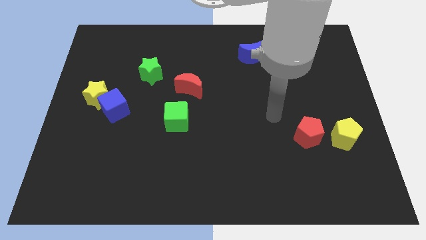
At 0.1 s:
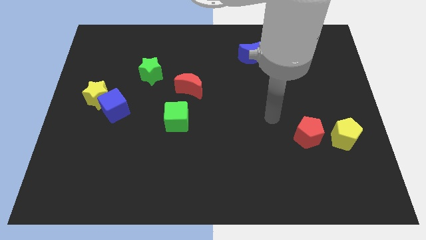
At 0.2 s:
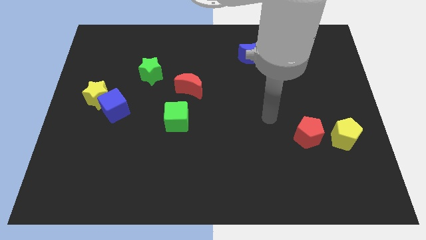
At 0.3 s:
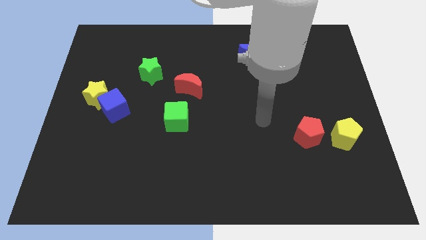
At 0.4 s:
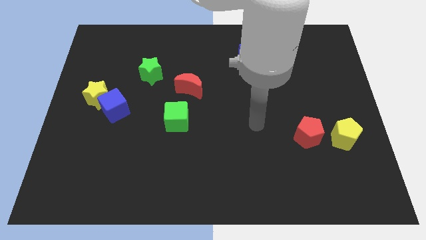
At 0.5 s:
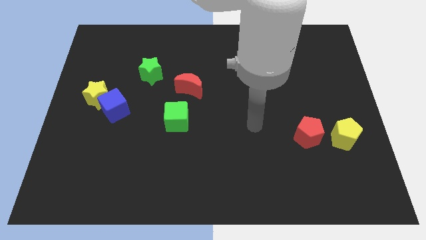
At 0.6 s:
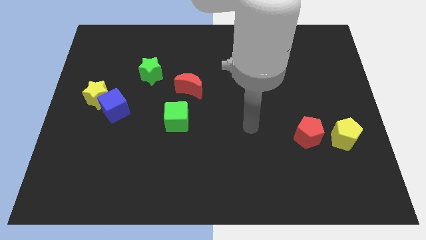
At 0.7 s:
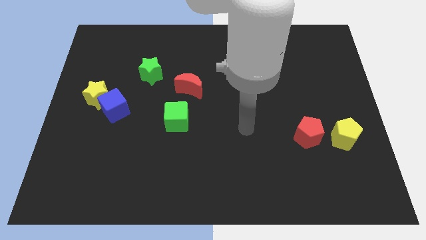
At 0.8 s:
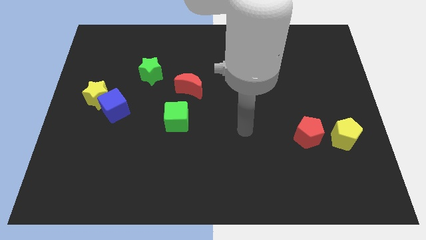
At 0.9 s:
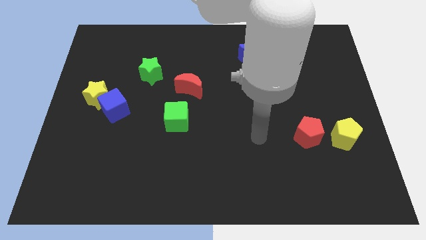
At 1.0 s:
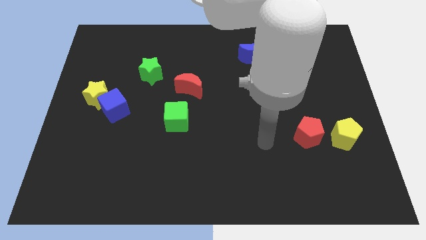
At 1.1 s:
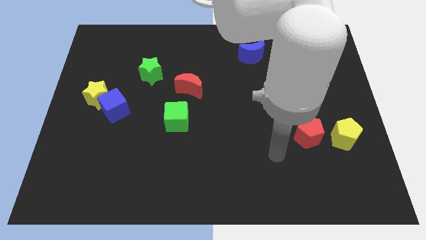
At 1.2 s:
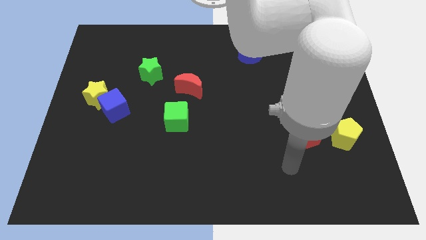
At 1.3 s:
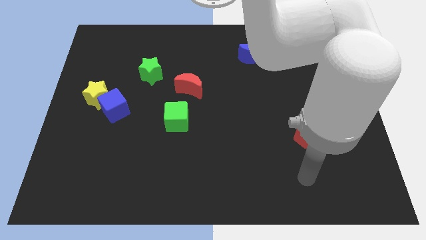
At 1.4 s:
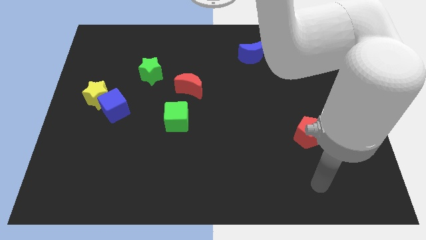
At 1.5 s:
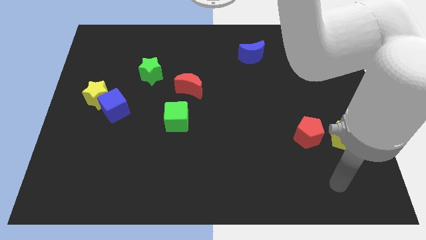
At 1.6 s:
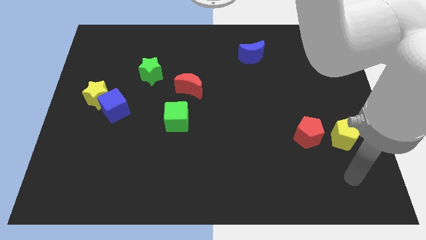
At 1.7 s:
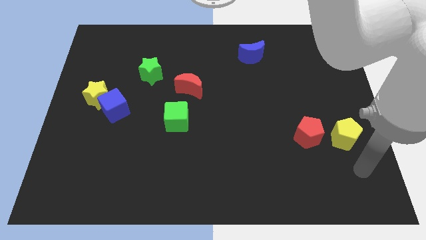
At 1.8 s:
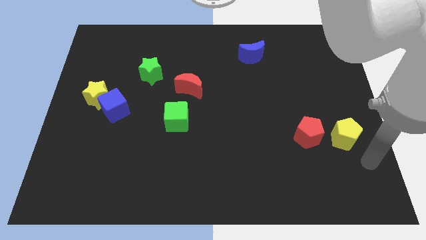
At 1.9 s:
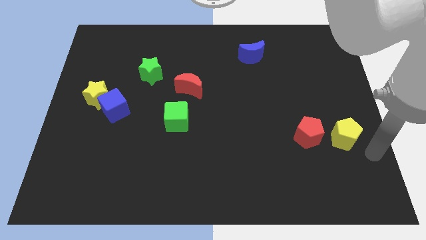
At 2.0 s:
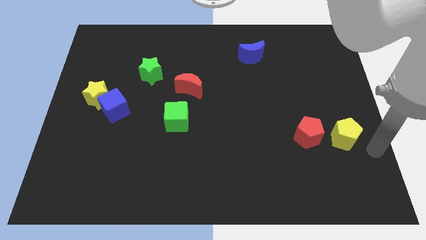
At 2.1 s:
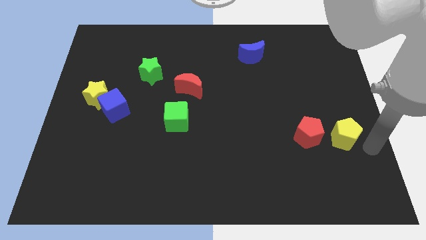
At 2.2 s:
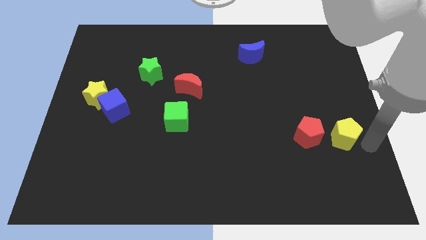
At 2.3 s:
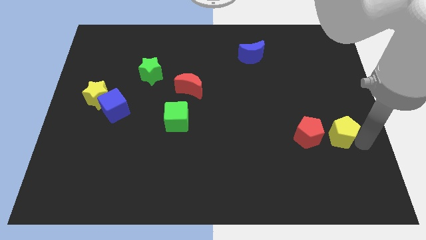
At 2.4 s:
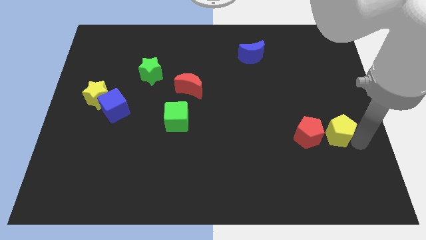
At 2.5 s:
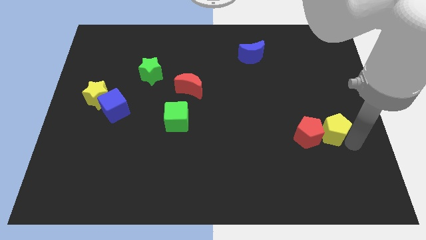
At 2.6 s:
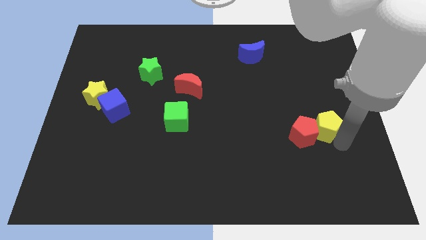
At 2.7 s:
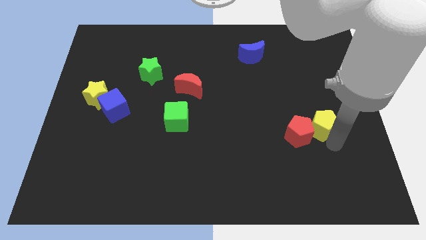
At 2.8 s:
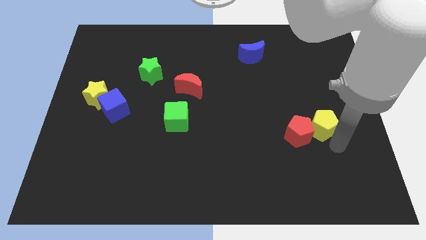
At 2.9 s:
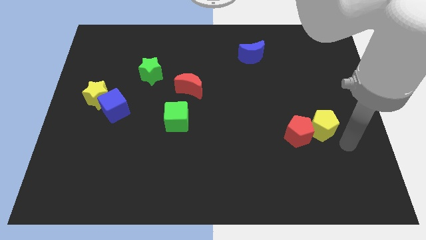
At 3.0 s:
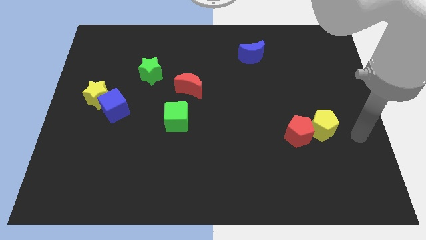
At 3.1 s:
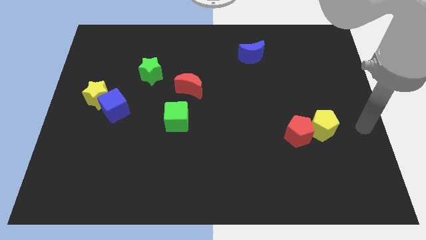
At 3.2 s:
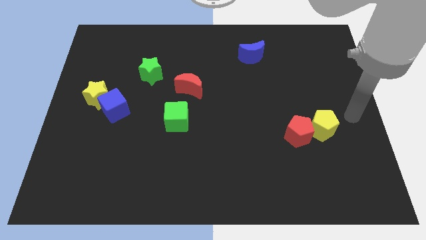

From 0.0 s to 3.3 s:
place yellow pentagon to the right of red pentagon

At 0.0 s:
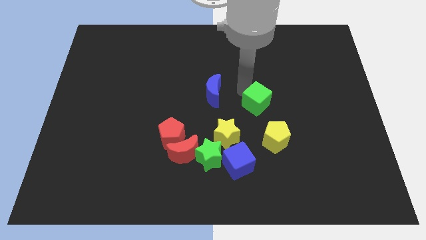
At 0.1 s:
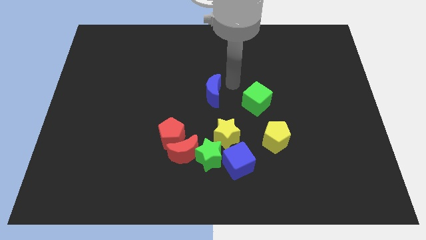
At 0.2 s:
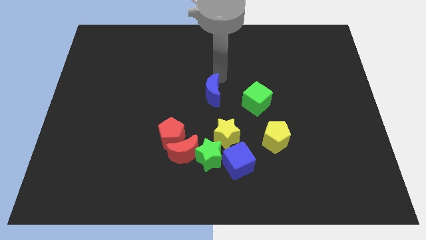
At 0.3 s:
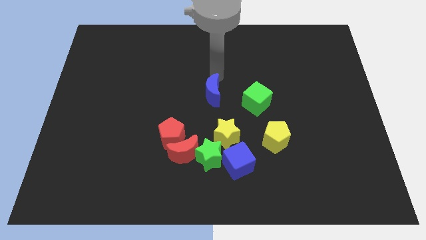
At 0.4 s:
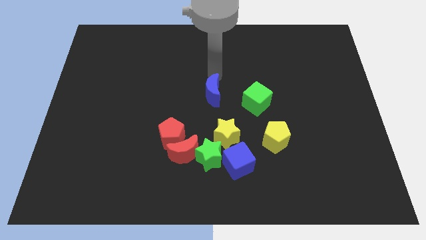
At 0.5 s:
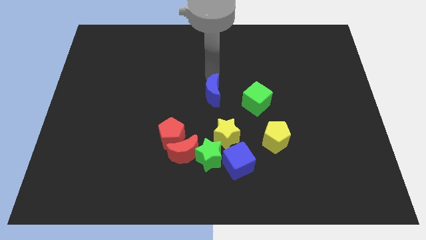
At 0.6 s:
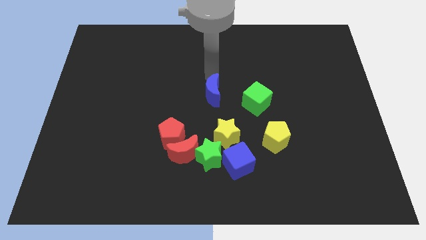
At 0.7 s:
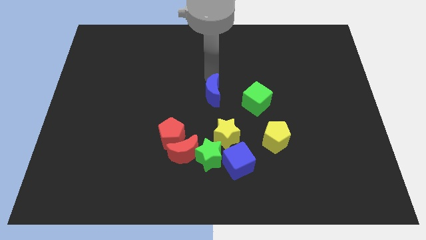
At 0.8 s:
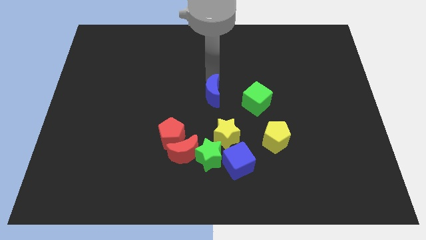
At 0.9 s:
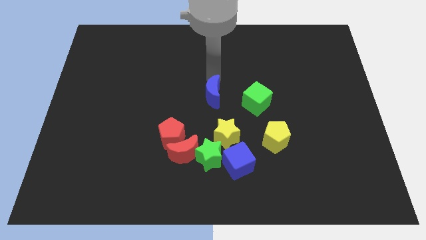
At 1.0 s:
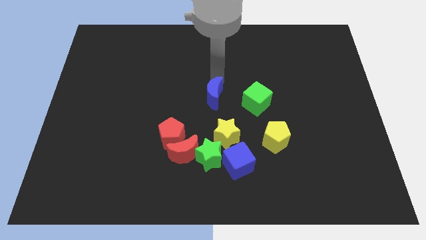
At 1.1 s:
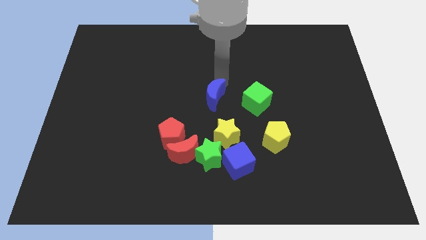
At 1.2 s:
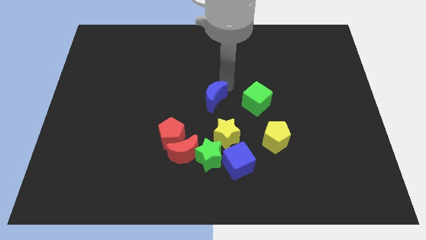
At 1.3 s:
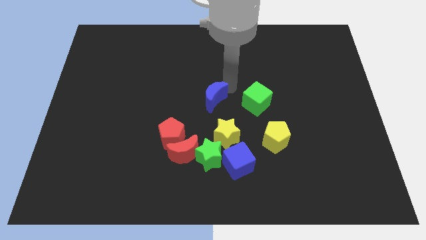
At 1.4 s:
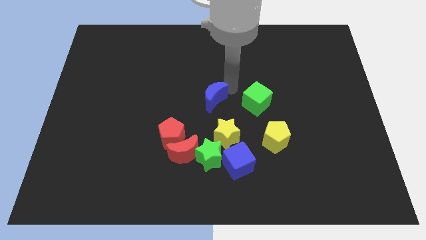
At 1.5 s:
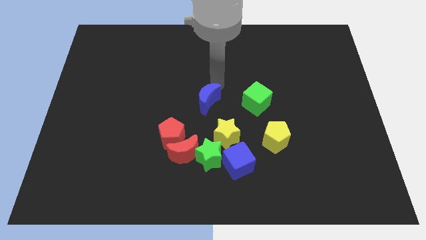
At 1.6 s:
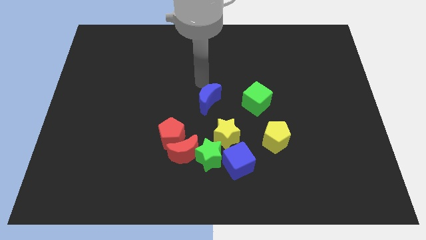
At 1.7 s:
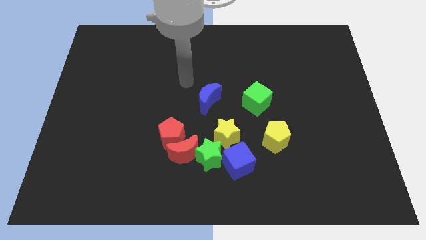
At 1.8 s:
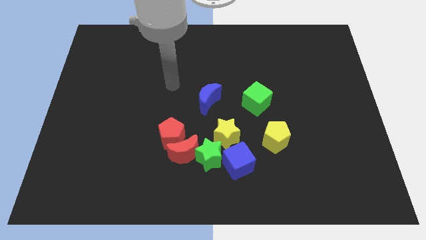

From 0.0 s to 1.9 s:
slide the blue crescent diagonally to green cube

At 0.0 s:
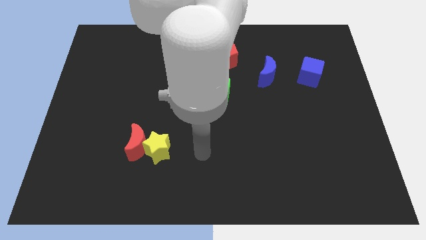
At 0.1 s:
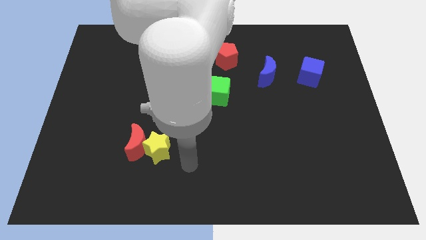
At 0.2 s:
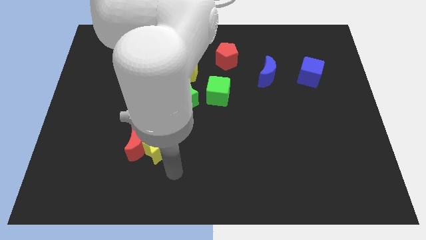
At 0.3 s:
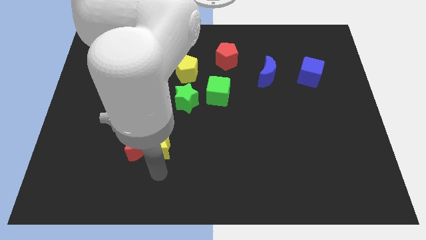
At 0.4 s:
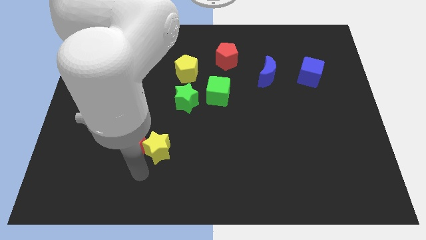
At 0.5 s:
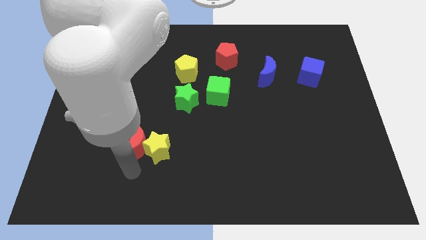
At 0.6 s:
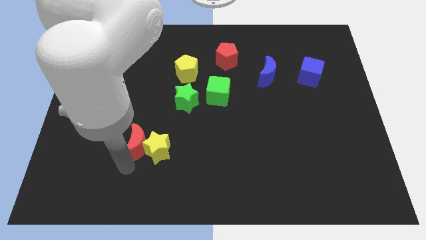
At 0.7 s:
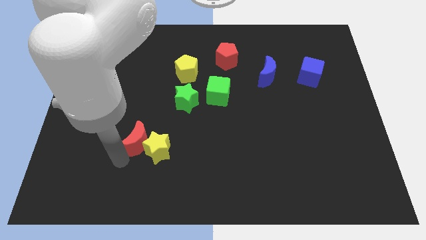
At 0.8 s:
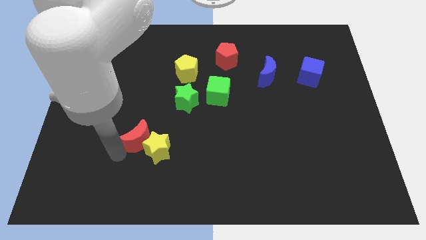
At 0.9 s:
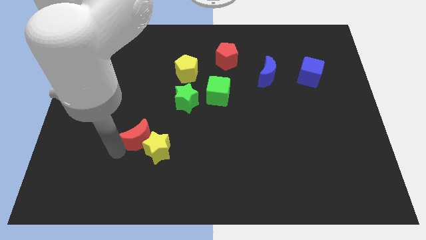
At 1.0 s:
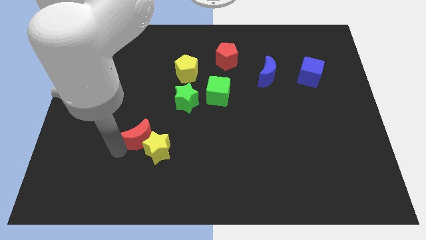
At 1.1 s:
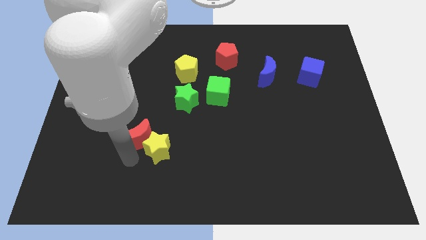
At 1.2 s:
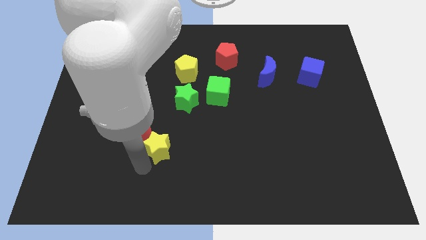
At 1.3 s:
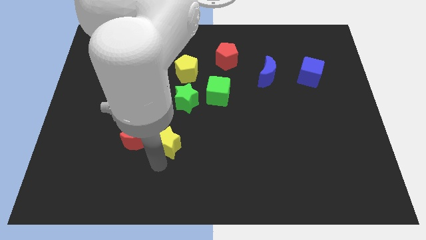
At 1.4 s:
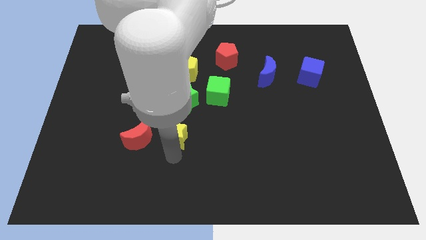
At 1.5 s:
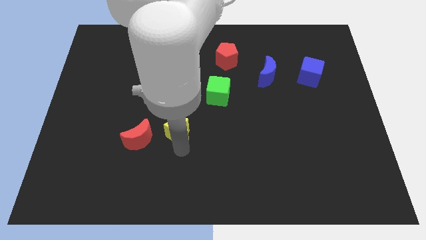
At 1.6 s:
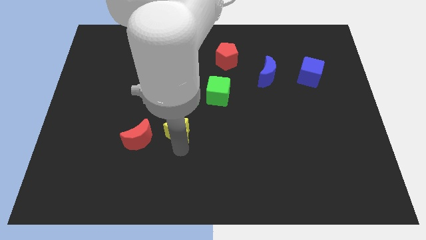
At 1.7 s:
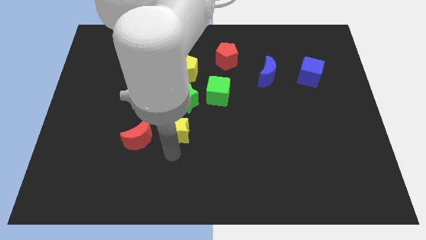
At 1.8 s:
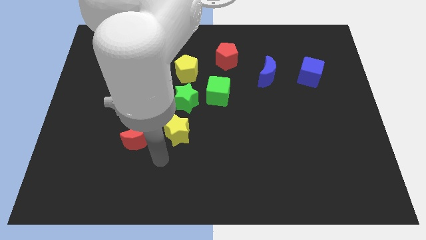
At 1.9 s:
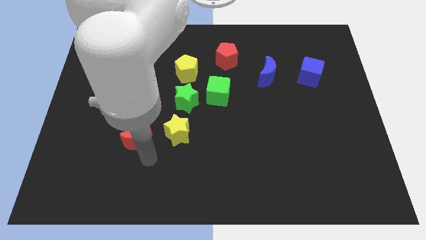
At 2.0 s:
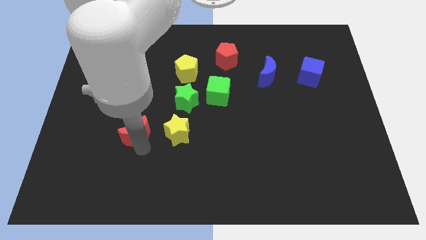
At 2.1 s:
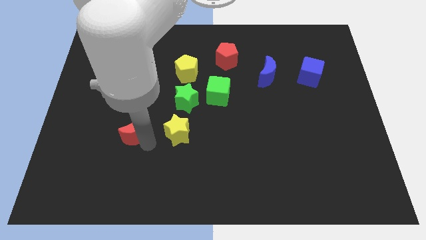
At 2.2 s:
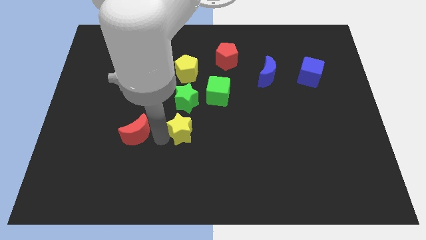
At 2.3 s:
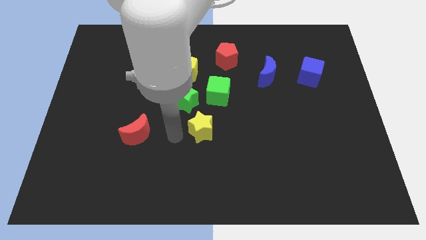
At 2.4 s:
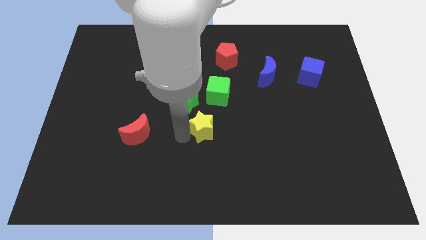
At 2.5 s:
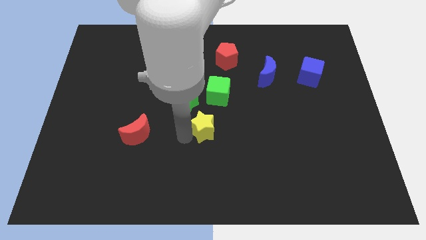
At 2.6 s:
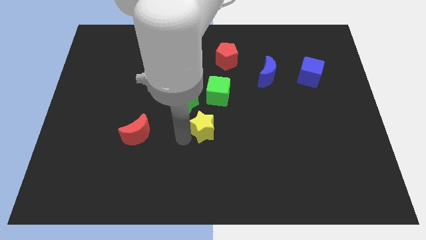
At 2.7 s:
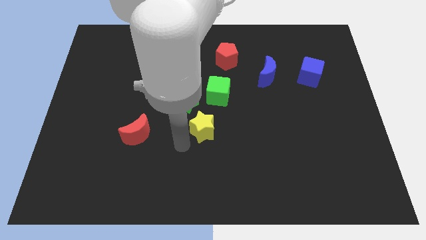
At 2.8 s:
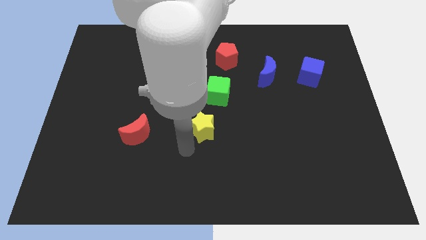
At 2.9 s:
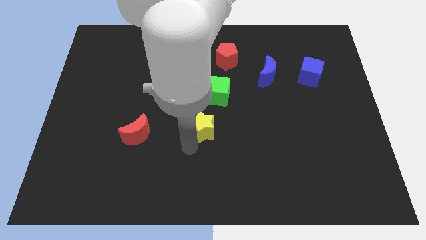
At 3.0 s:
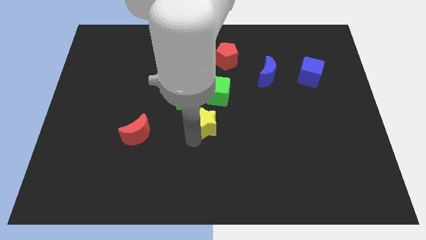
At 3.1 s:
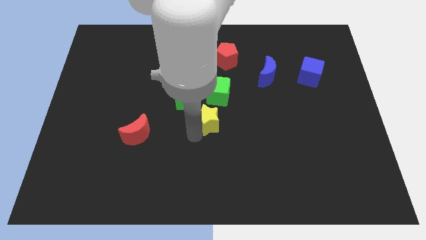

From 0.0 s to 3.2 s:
separate yellow star from red crescent

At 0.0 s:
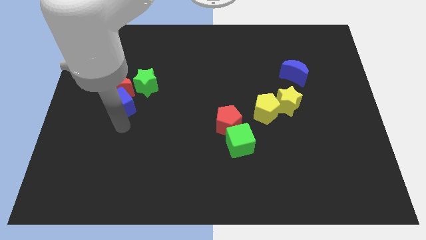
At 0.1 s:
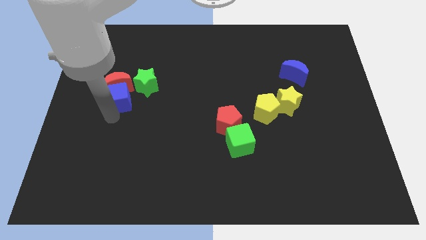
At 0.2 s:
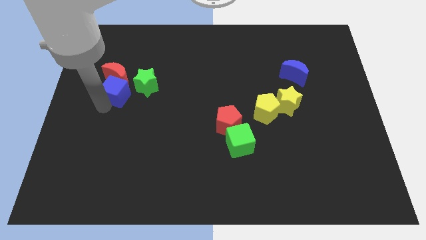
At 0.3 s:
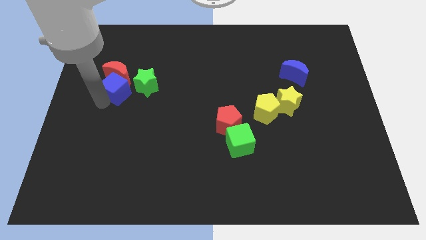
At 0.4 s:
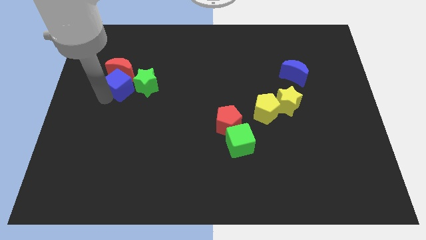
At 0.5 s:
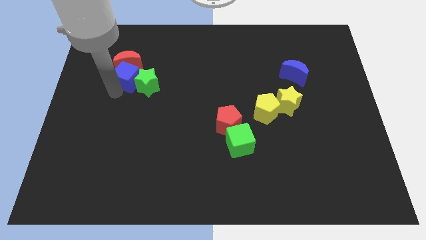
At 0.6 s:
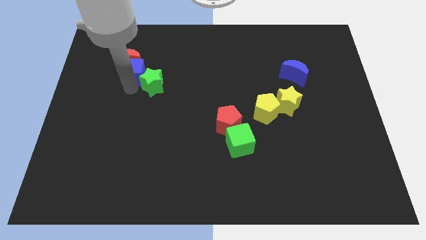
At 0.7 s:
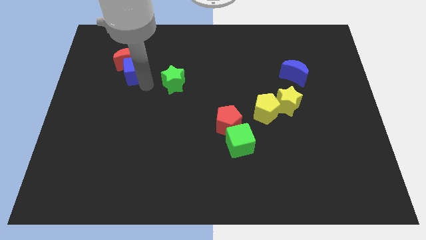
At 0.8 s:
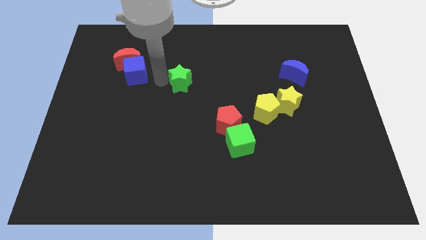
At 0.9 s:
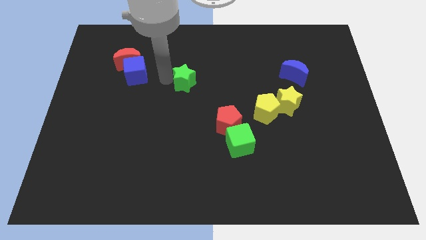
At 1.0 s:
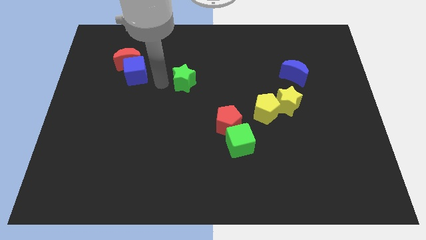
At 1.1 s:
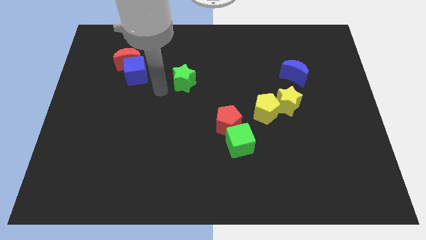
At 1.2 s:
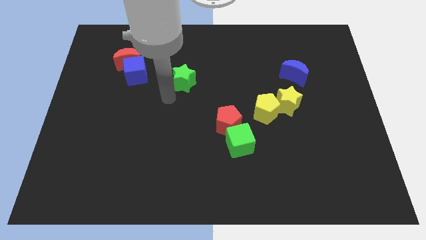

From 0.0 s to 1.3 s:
slide the green star to the right
